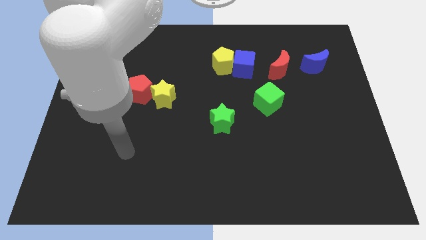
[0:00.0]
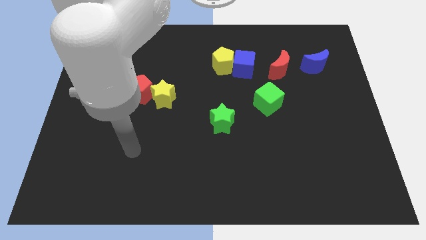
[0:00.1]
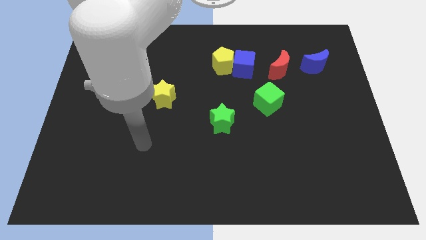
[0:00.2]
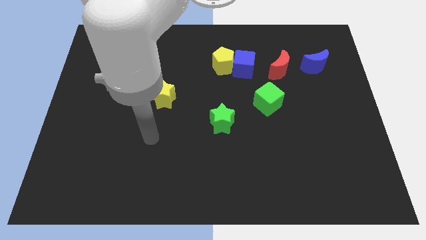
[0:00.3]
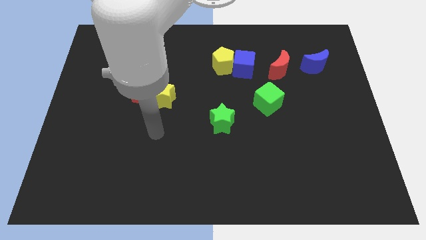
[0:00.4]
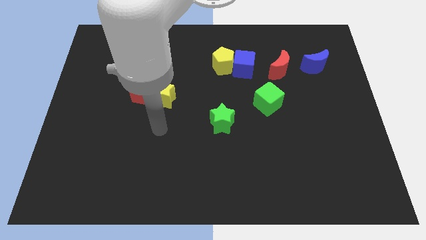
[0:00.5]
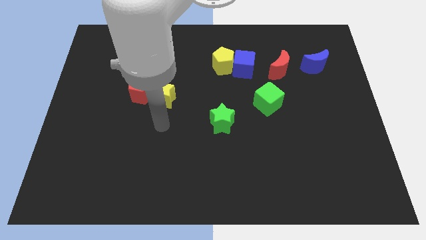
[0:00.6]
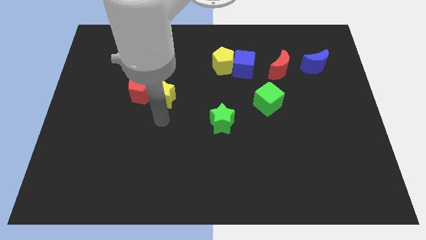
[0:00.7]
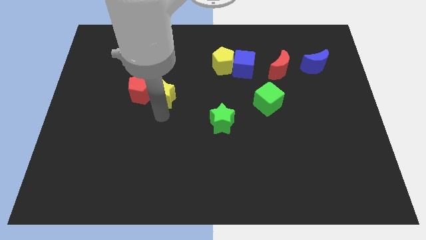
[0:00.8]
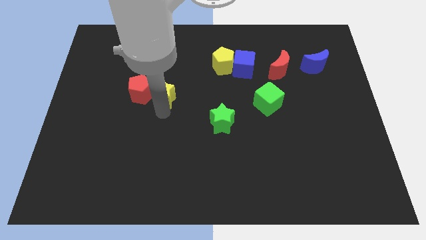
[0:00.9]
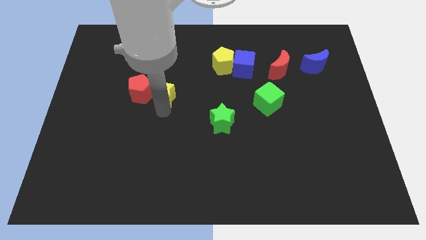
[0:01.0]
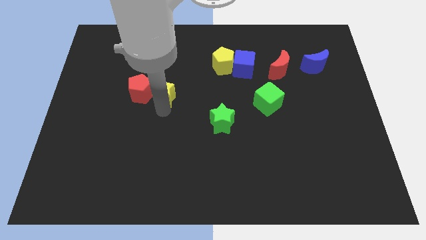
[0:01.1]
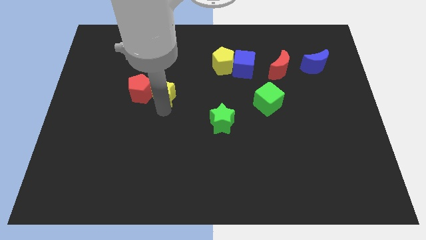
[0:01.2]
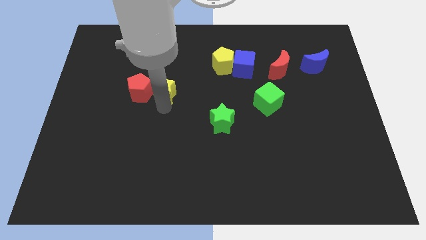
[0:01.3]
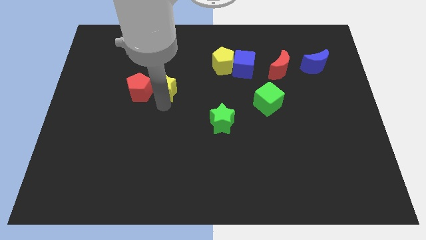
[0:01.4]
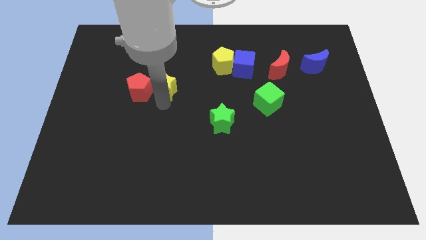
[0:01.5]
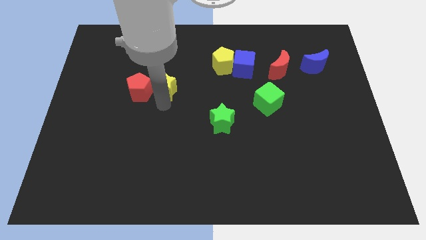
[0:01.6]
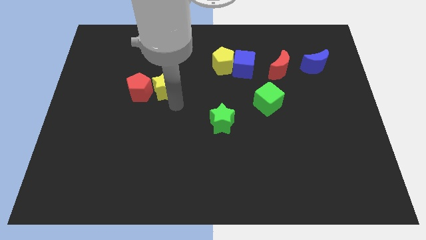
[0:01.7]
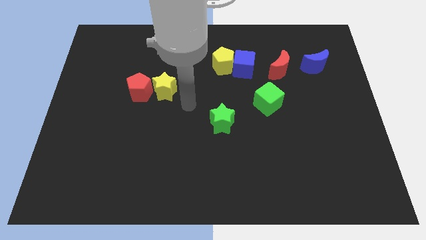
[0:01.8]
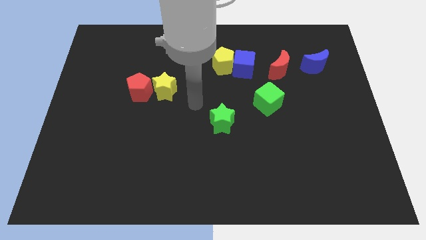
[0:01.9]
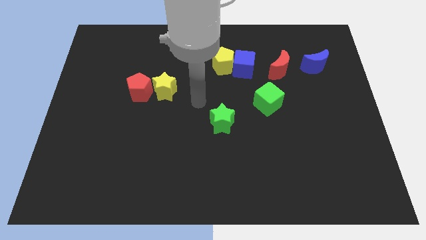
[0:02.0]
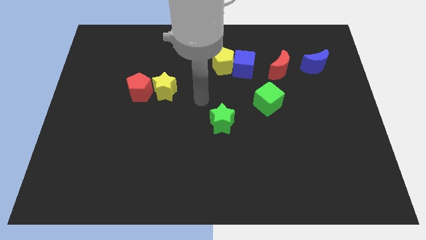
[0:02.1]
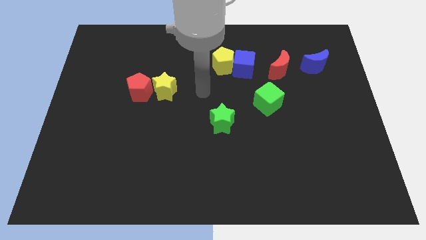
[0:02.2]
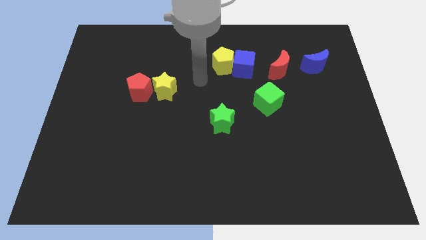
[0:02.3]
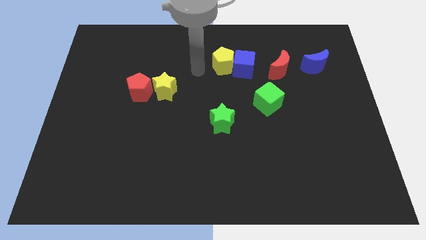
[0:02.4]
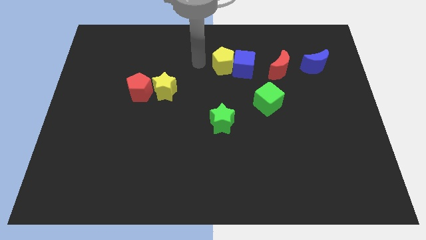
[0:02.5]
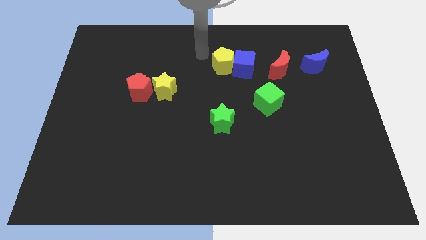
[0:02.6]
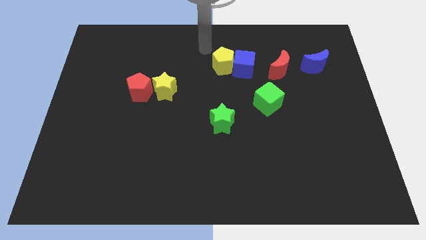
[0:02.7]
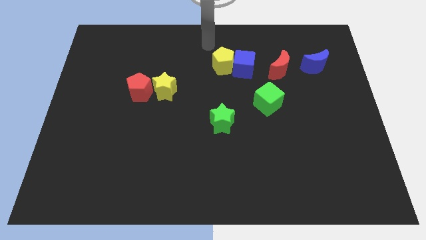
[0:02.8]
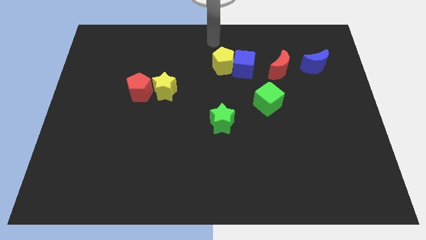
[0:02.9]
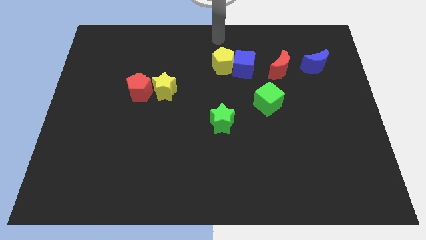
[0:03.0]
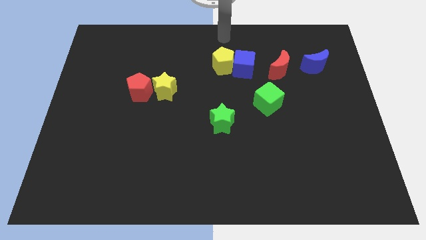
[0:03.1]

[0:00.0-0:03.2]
place the arm towards the top centre of the centre

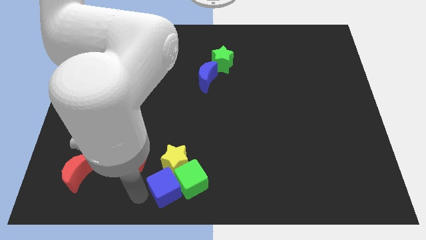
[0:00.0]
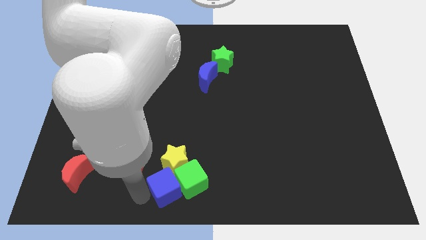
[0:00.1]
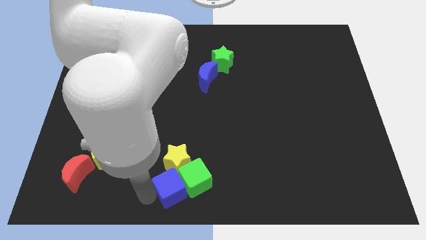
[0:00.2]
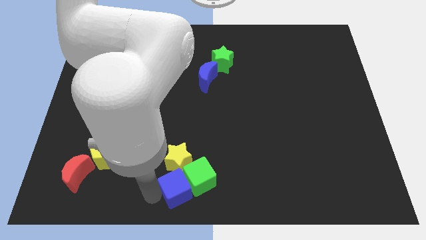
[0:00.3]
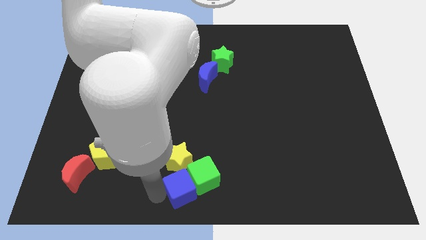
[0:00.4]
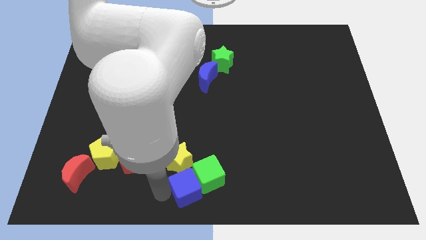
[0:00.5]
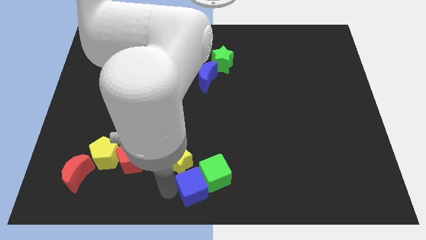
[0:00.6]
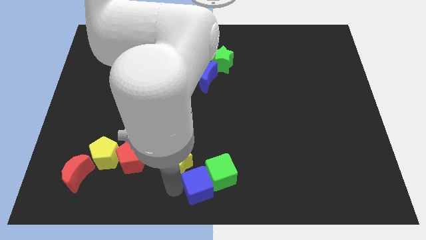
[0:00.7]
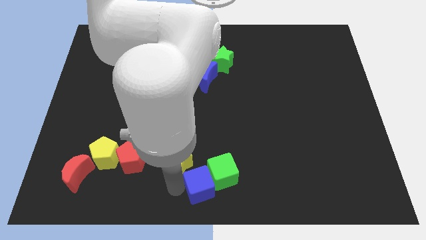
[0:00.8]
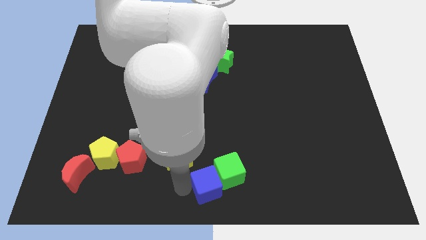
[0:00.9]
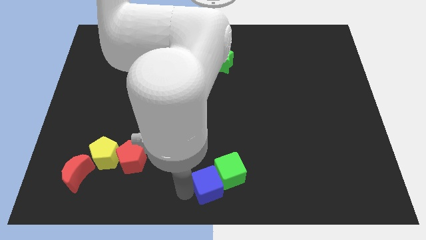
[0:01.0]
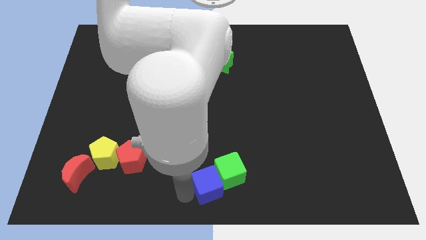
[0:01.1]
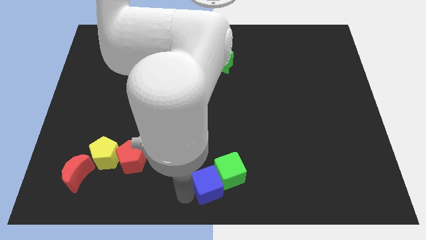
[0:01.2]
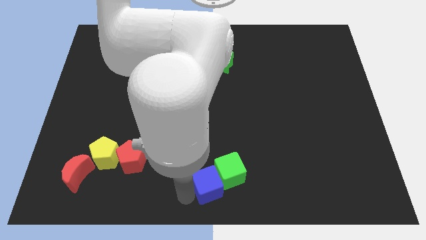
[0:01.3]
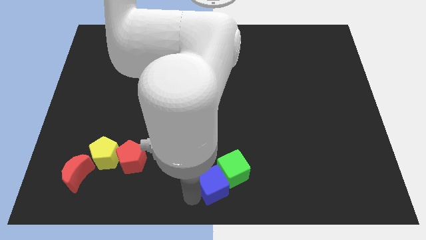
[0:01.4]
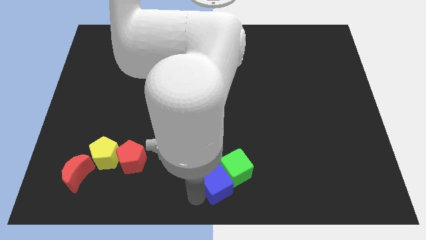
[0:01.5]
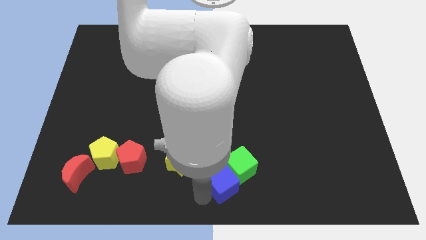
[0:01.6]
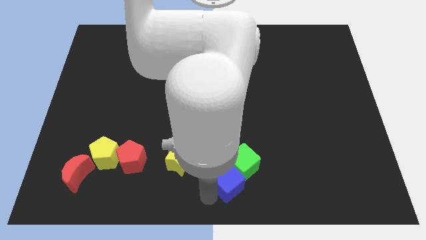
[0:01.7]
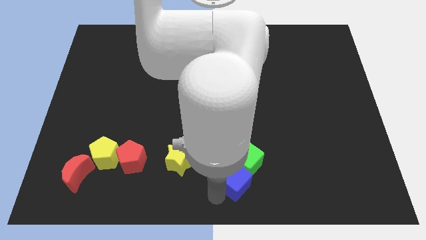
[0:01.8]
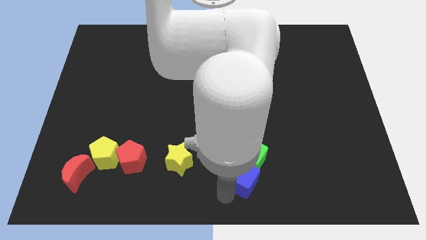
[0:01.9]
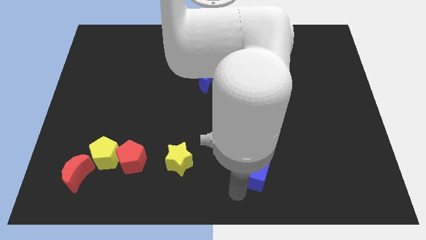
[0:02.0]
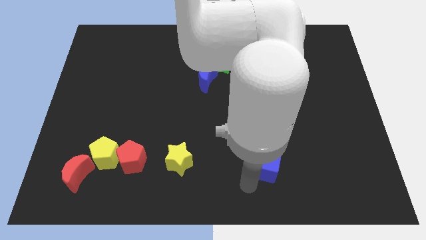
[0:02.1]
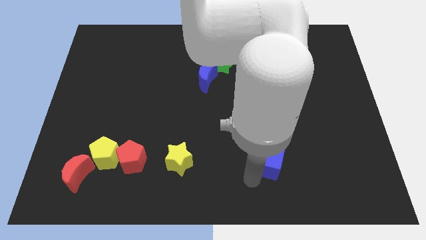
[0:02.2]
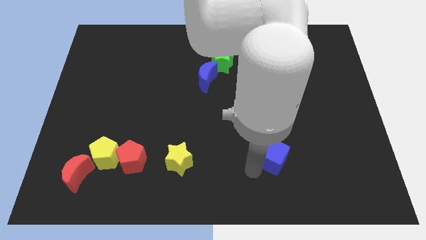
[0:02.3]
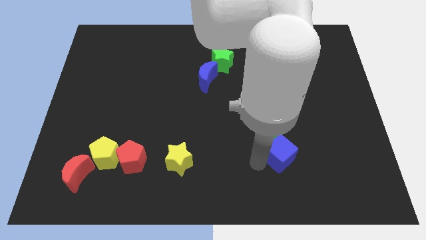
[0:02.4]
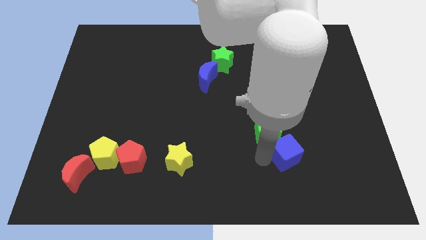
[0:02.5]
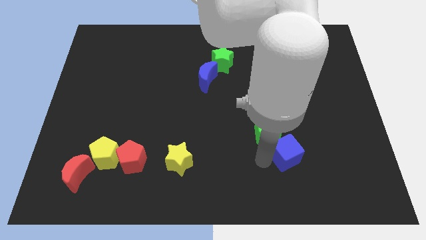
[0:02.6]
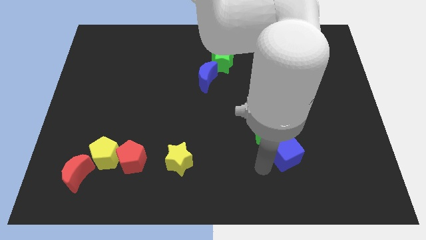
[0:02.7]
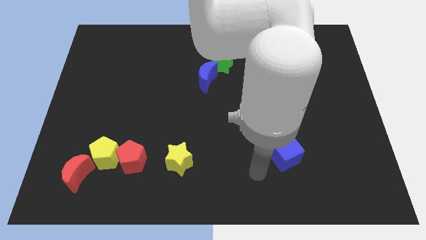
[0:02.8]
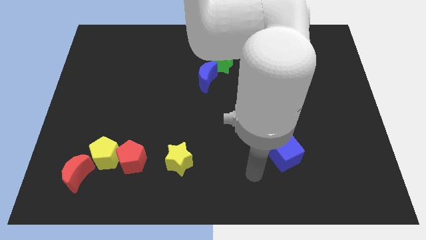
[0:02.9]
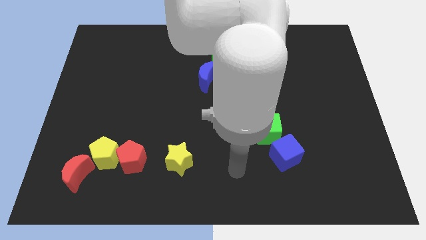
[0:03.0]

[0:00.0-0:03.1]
move the blue cube and green cube to the right side of the yellow star

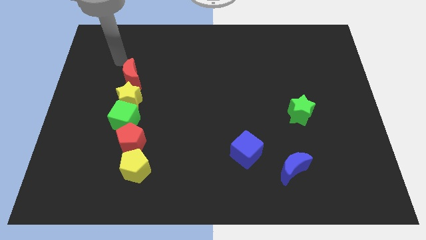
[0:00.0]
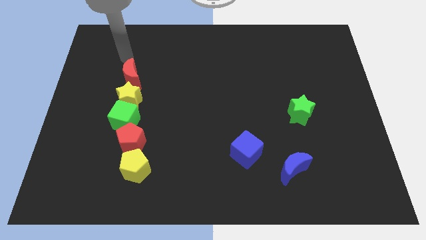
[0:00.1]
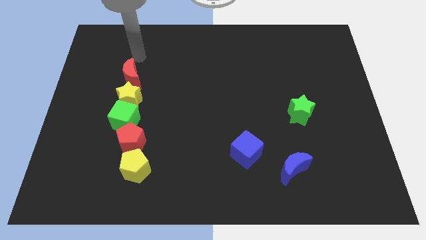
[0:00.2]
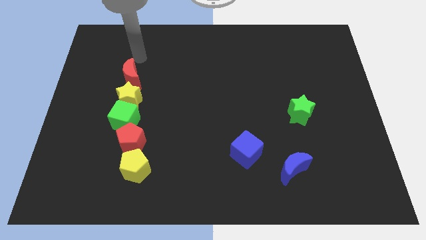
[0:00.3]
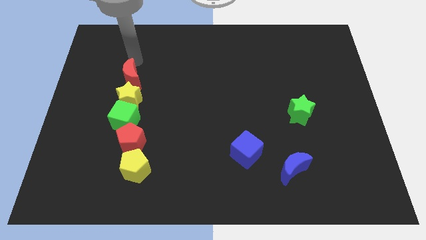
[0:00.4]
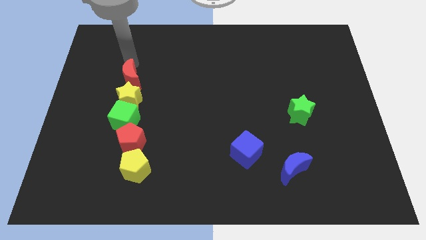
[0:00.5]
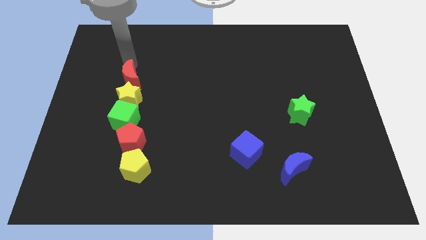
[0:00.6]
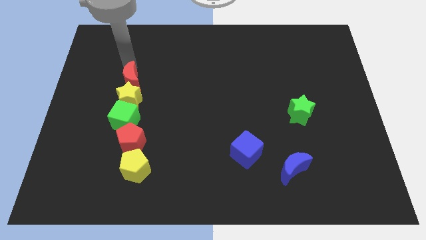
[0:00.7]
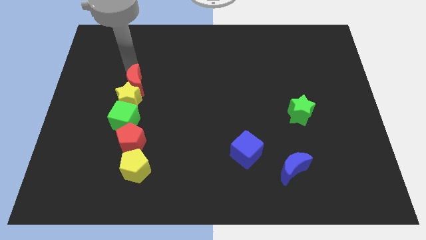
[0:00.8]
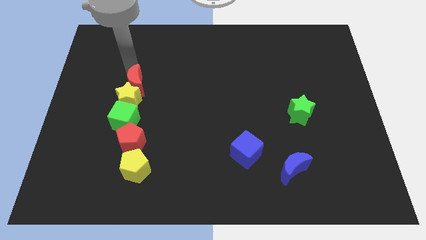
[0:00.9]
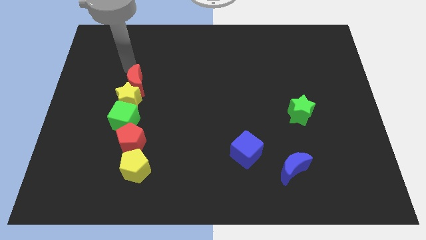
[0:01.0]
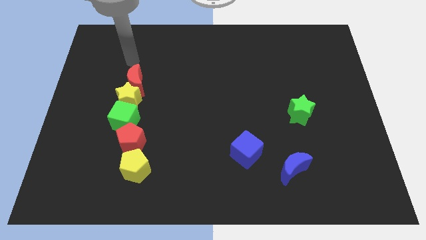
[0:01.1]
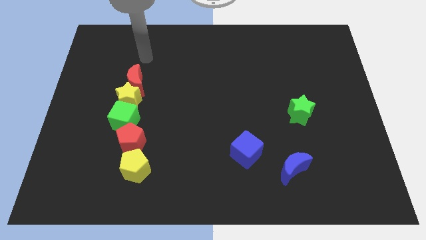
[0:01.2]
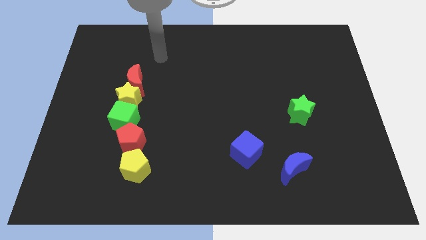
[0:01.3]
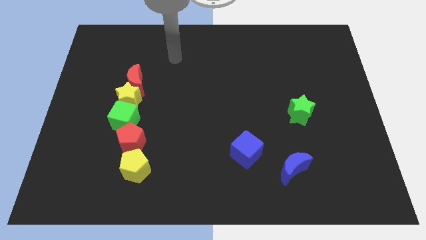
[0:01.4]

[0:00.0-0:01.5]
push the red moon into the yellow star

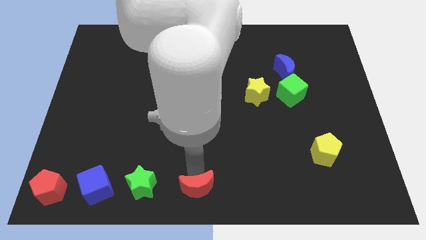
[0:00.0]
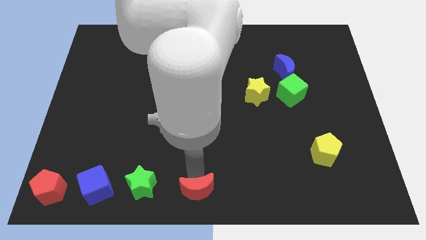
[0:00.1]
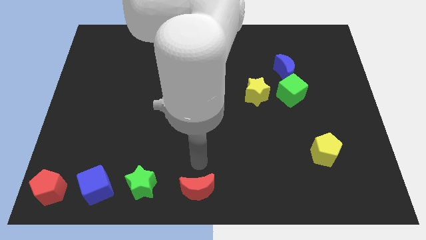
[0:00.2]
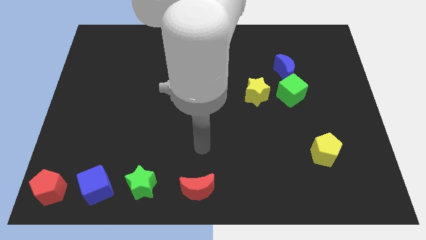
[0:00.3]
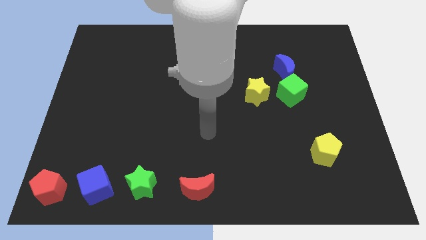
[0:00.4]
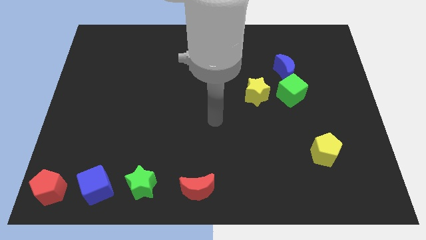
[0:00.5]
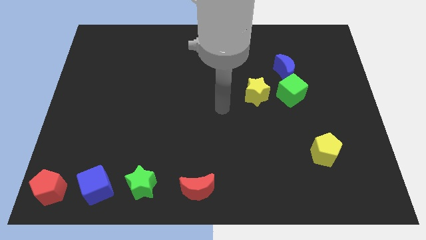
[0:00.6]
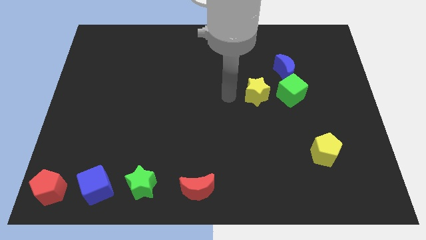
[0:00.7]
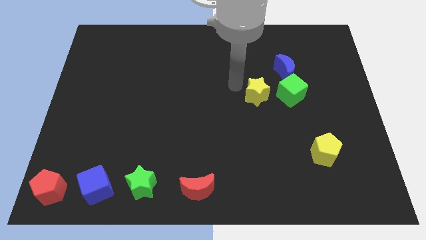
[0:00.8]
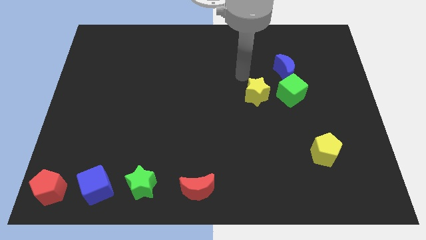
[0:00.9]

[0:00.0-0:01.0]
move your arm away from red moon

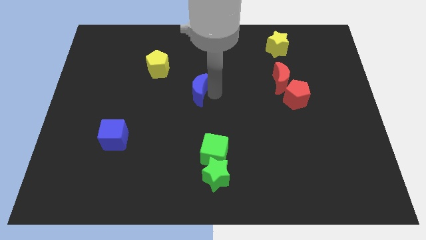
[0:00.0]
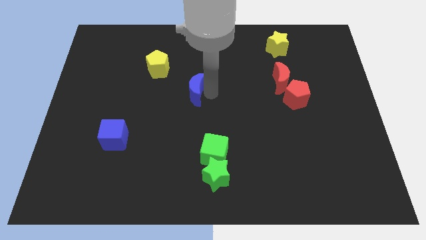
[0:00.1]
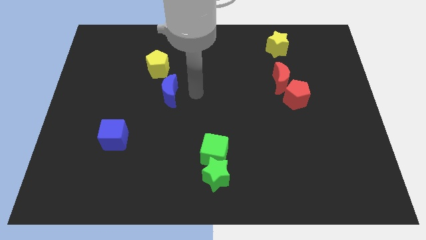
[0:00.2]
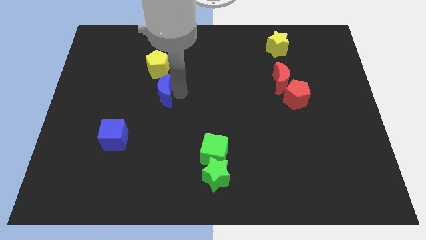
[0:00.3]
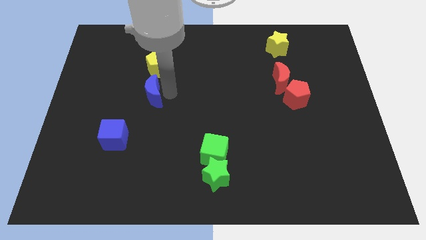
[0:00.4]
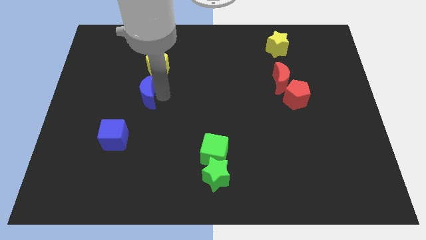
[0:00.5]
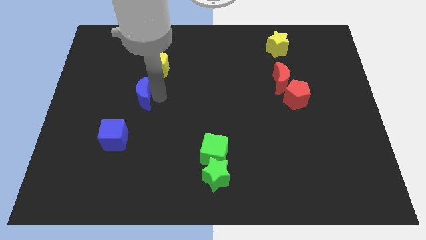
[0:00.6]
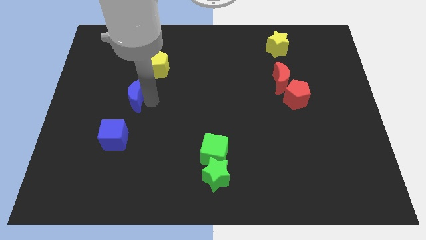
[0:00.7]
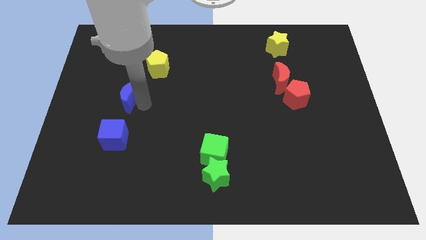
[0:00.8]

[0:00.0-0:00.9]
place the blue moon in between the blue cube and yellow pentagon
